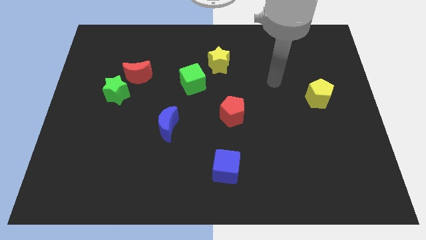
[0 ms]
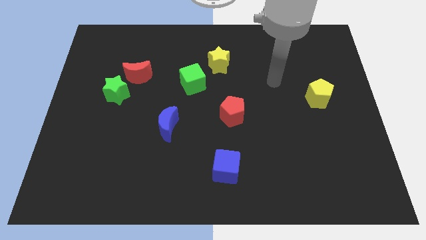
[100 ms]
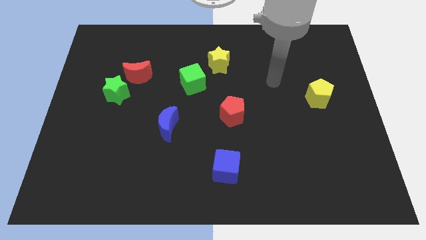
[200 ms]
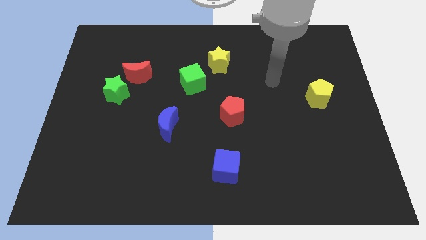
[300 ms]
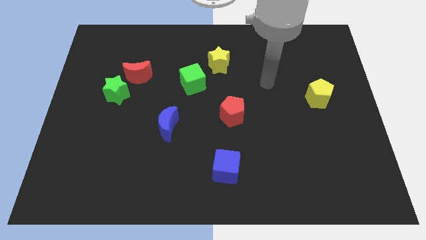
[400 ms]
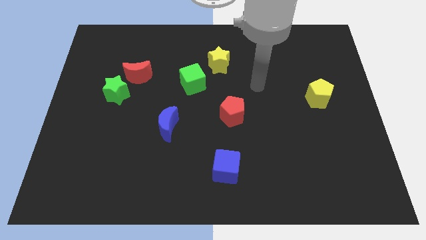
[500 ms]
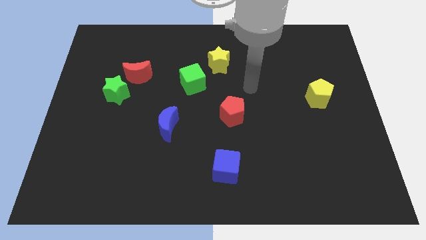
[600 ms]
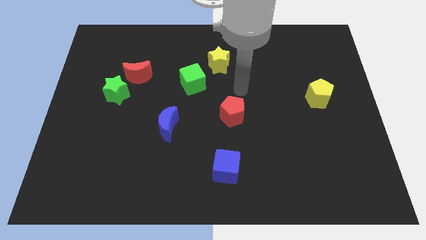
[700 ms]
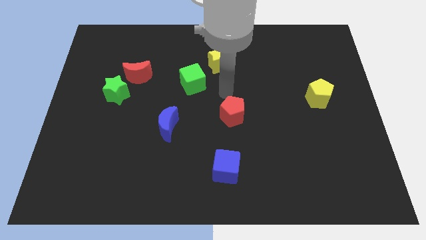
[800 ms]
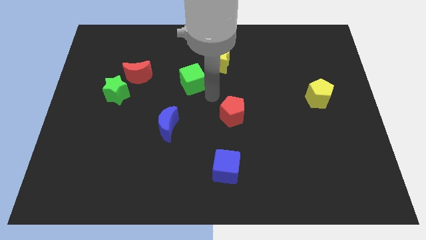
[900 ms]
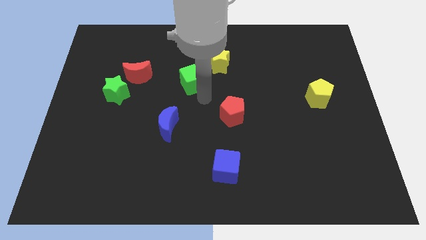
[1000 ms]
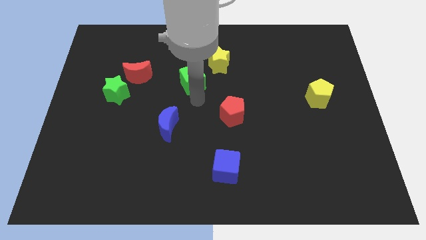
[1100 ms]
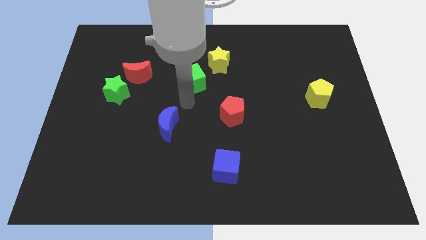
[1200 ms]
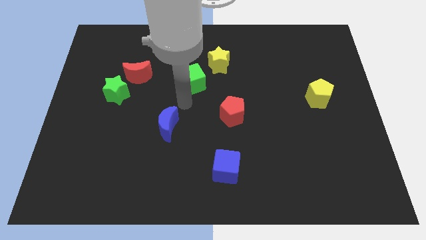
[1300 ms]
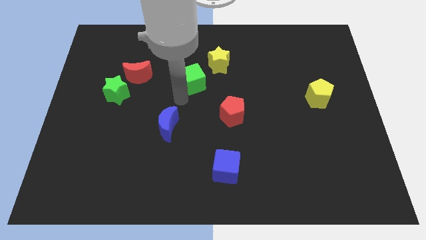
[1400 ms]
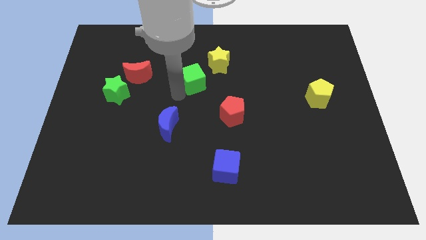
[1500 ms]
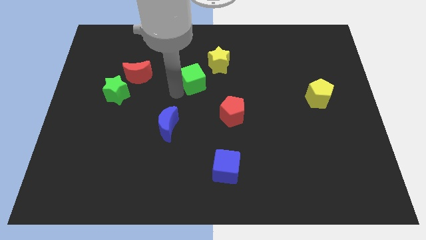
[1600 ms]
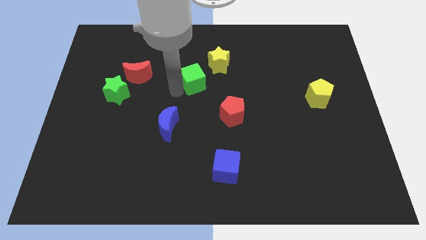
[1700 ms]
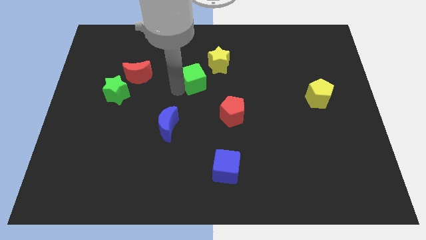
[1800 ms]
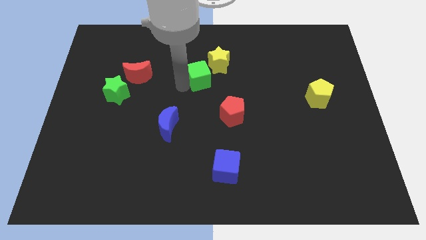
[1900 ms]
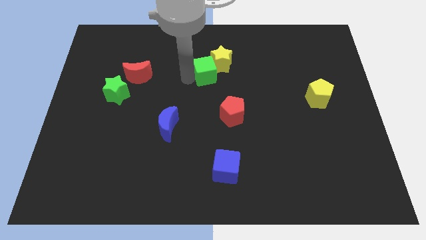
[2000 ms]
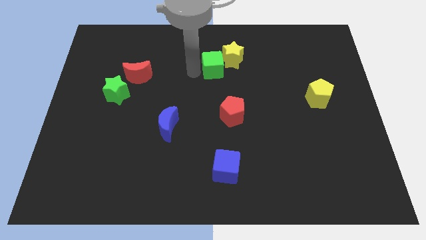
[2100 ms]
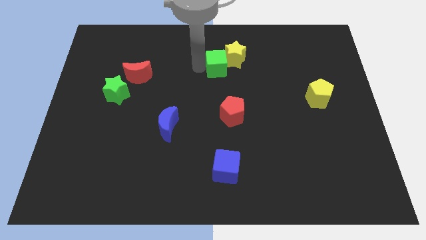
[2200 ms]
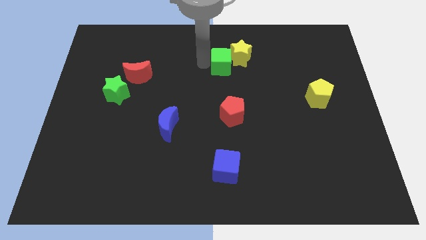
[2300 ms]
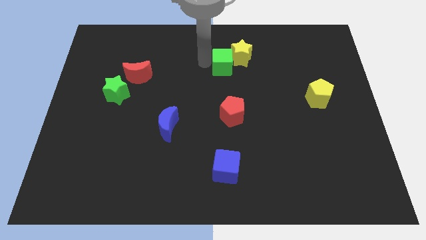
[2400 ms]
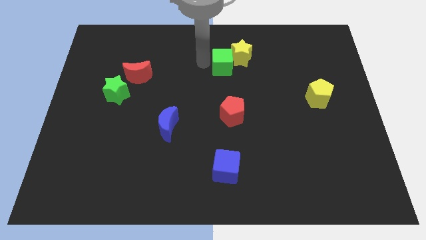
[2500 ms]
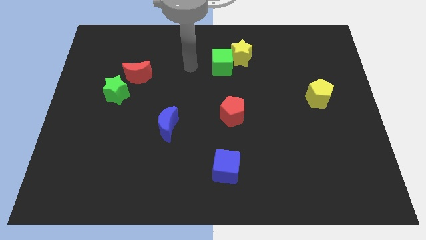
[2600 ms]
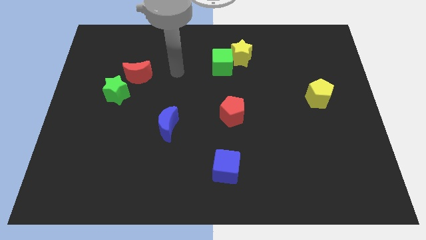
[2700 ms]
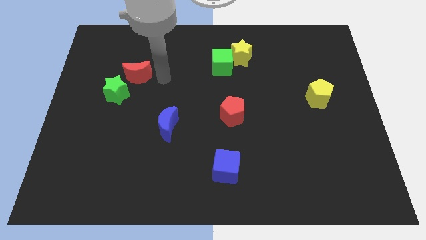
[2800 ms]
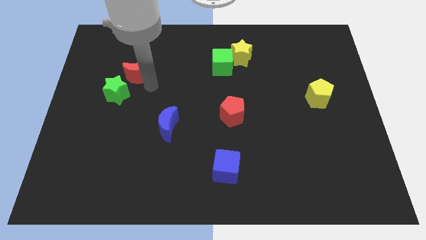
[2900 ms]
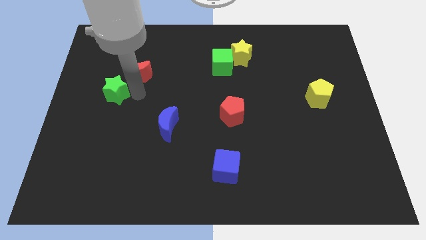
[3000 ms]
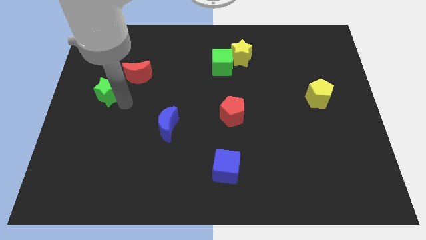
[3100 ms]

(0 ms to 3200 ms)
push the green cube into the yellow star

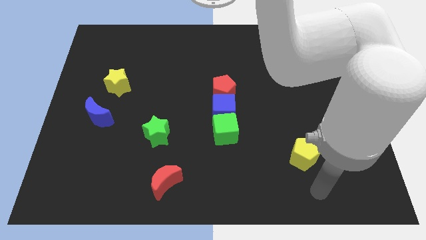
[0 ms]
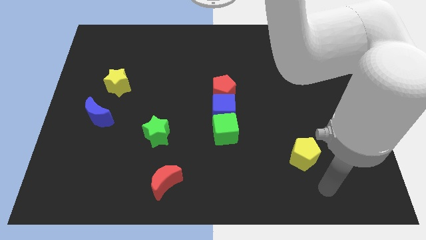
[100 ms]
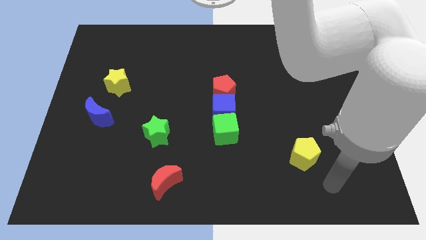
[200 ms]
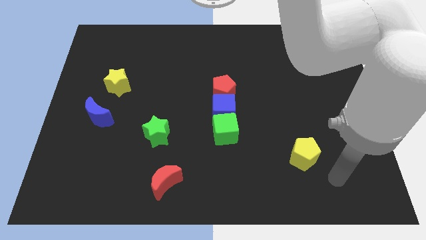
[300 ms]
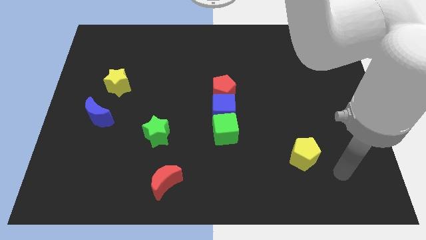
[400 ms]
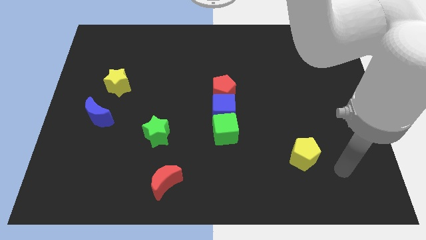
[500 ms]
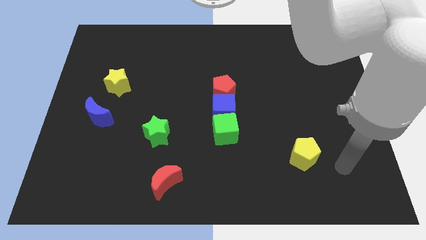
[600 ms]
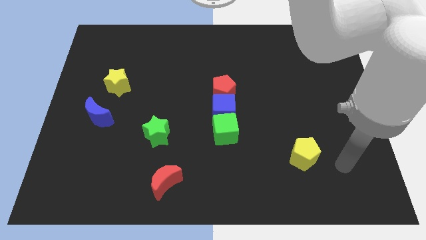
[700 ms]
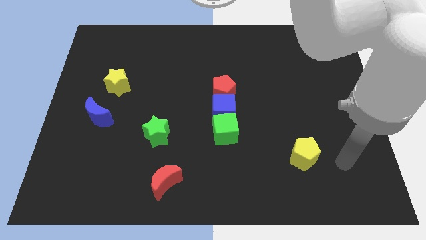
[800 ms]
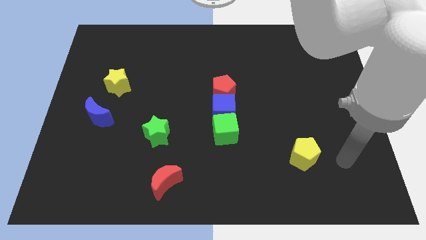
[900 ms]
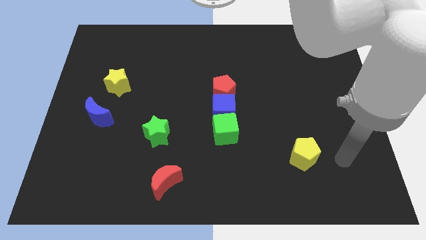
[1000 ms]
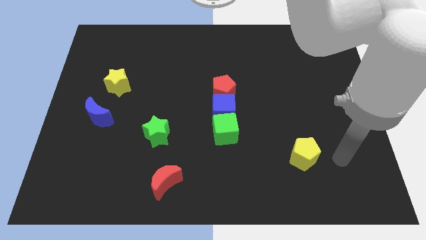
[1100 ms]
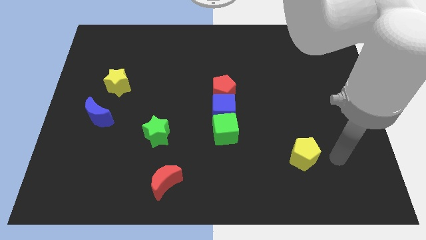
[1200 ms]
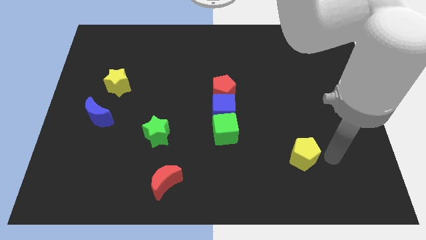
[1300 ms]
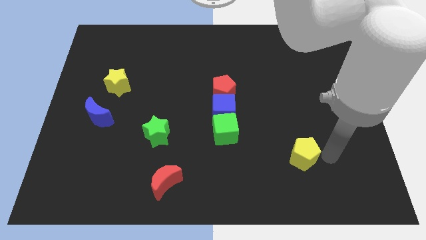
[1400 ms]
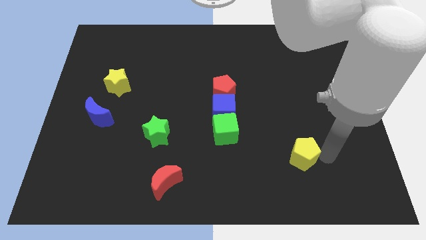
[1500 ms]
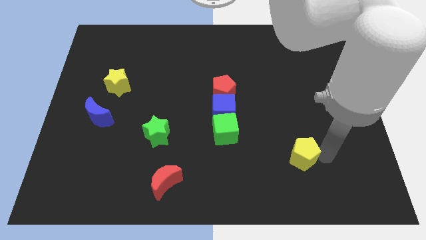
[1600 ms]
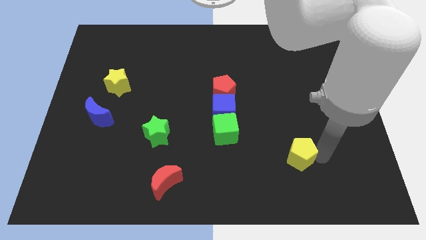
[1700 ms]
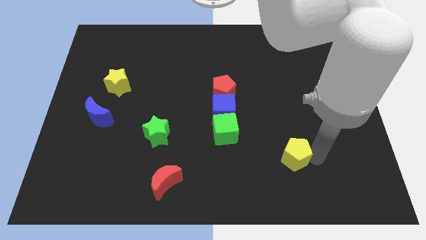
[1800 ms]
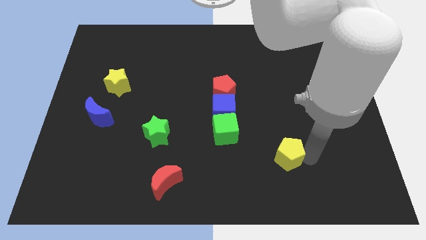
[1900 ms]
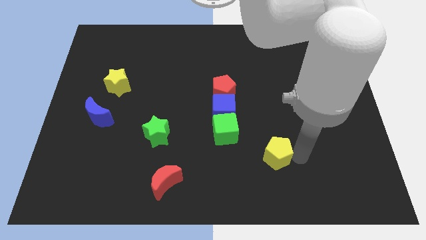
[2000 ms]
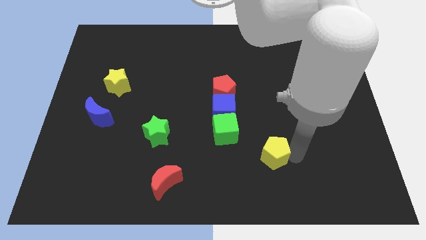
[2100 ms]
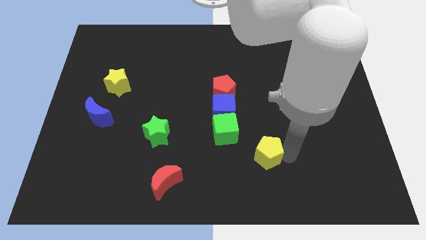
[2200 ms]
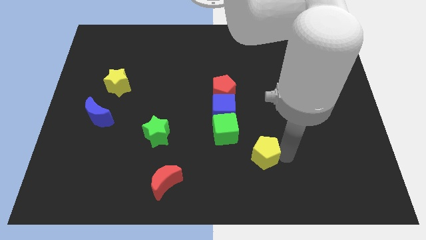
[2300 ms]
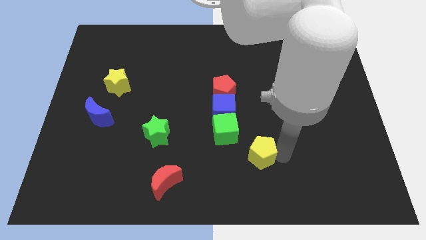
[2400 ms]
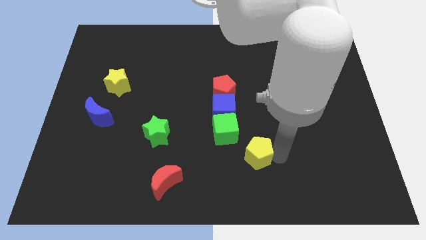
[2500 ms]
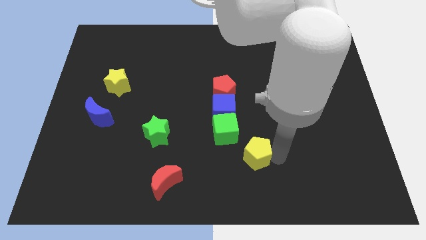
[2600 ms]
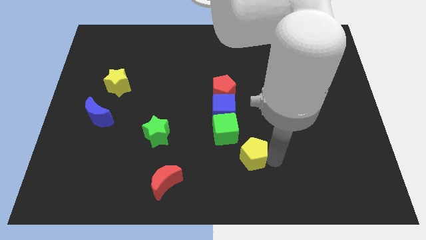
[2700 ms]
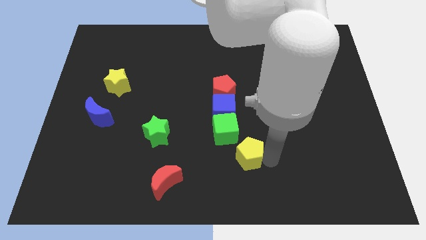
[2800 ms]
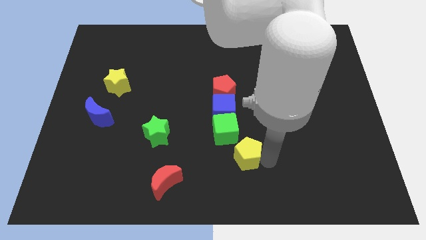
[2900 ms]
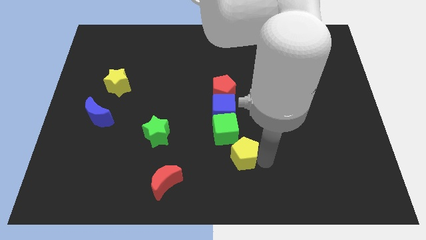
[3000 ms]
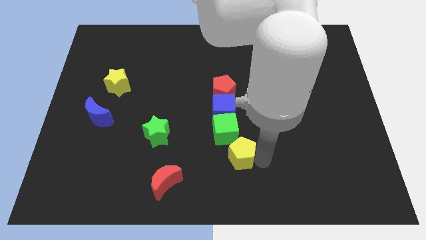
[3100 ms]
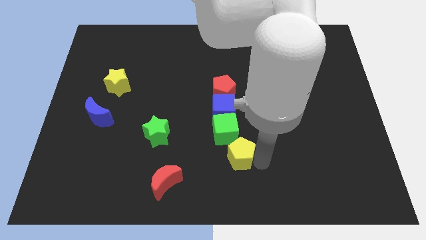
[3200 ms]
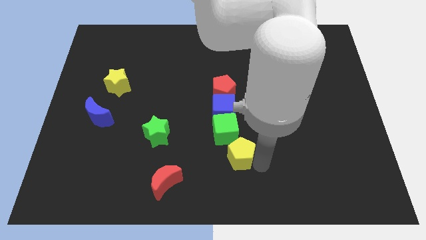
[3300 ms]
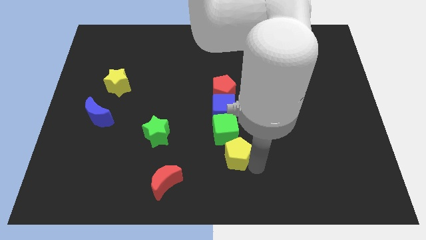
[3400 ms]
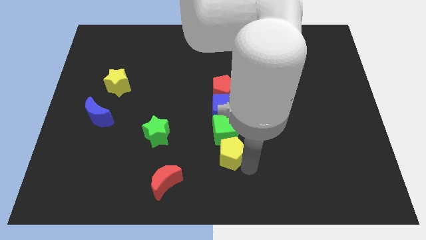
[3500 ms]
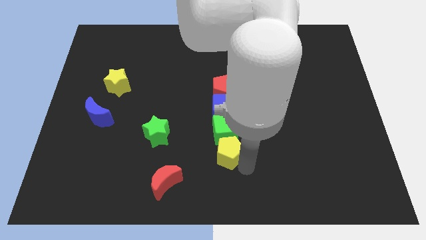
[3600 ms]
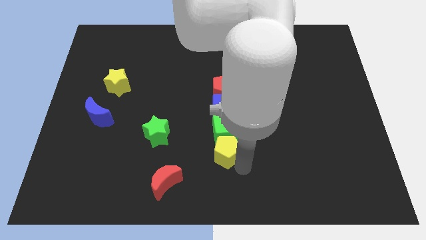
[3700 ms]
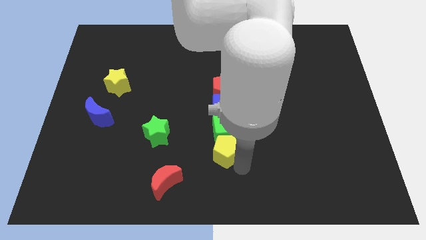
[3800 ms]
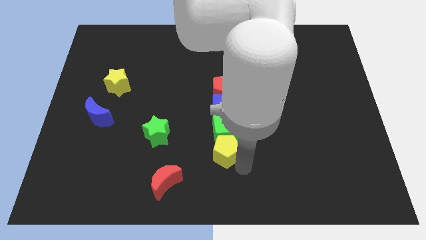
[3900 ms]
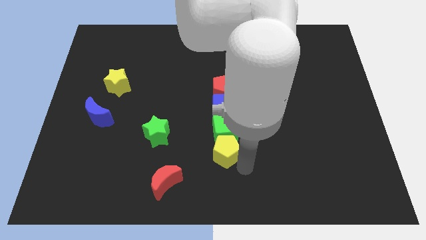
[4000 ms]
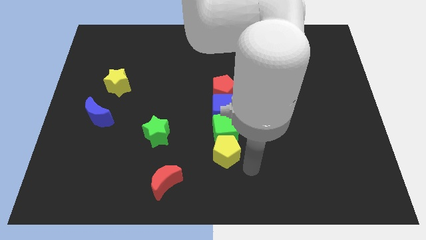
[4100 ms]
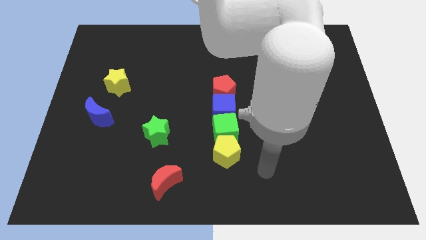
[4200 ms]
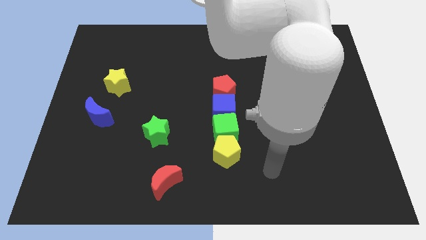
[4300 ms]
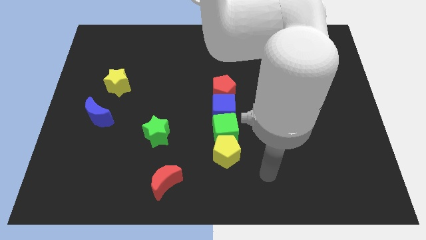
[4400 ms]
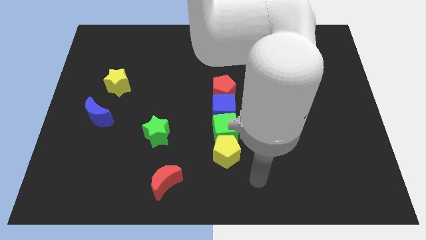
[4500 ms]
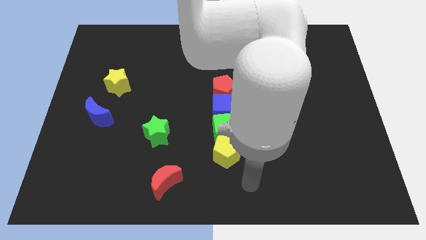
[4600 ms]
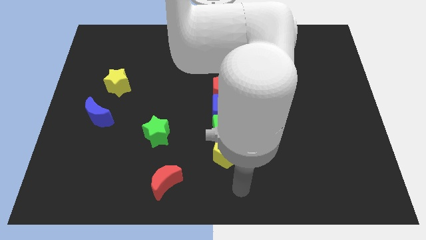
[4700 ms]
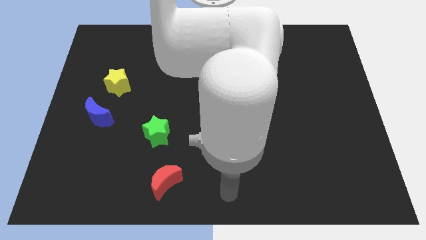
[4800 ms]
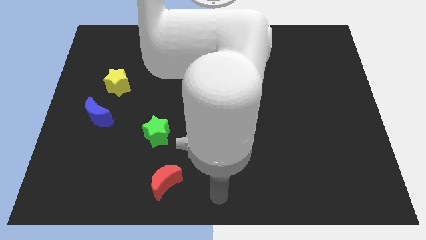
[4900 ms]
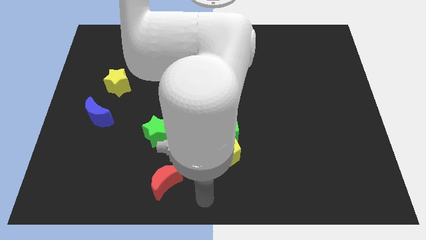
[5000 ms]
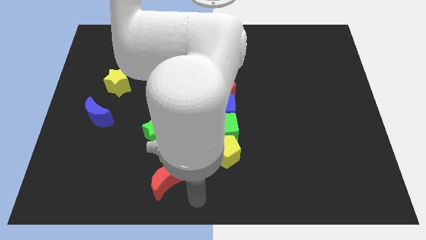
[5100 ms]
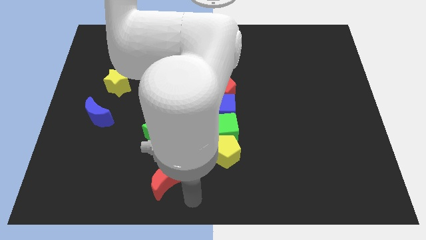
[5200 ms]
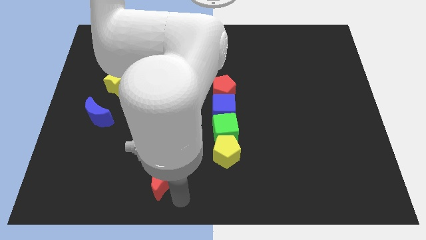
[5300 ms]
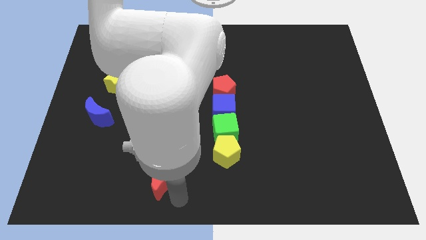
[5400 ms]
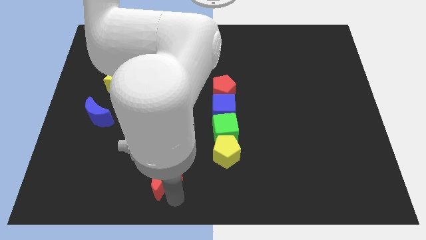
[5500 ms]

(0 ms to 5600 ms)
place the yellow pentagon close to the green cube
